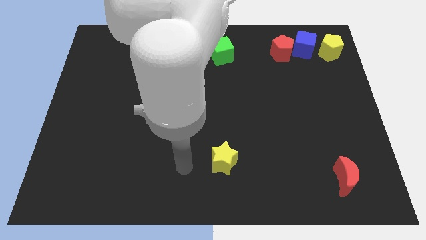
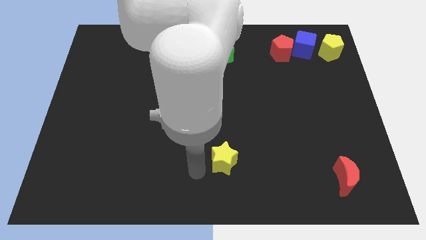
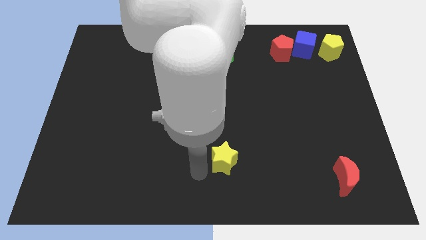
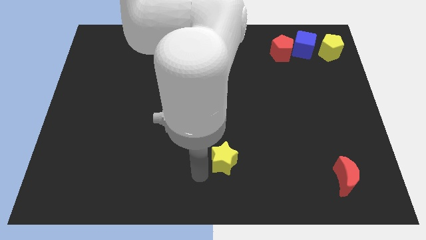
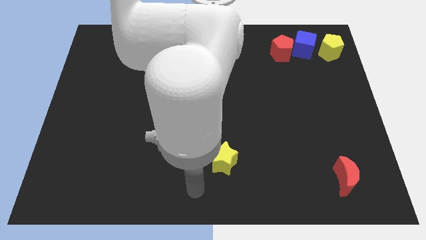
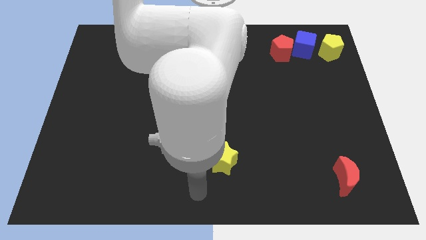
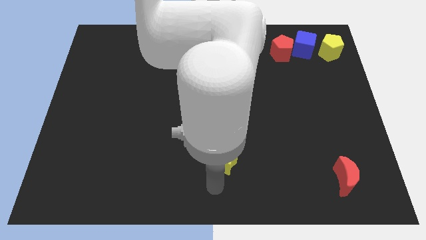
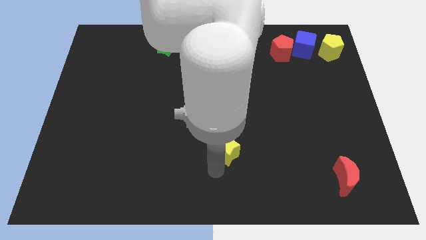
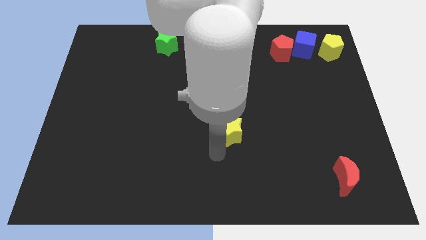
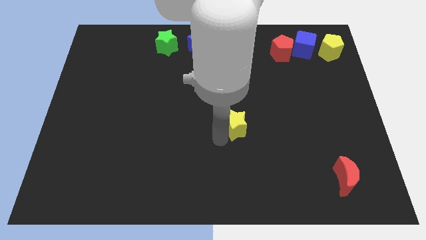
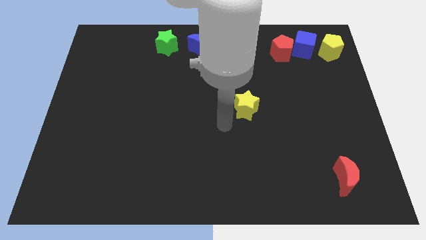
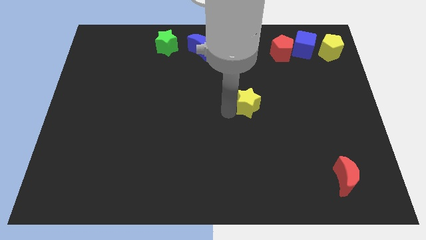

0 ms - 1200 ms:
slide the yellow star diagonally bottom left to red pentagon

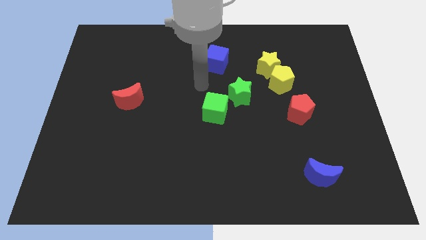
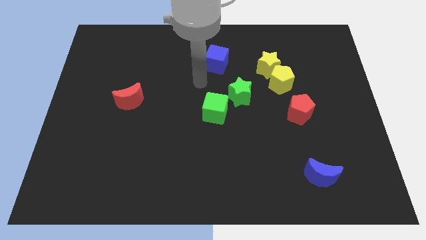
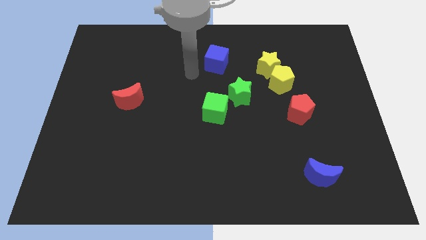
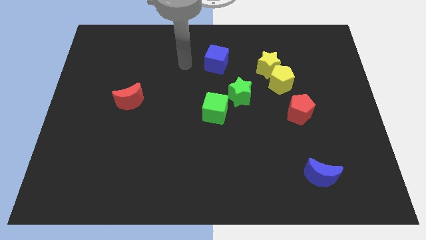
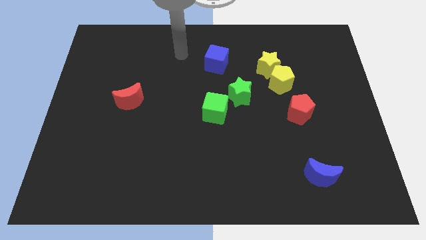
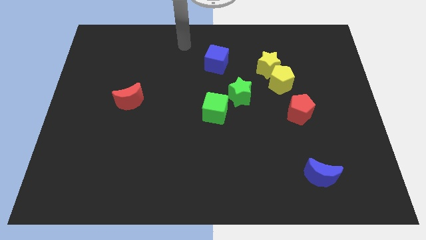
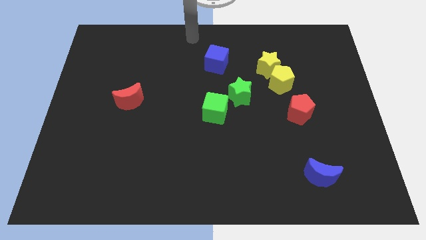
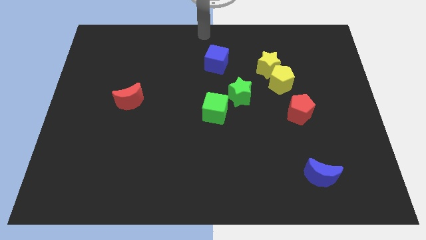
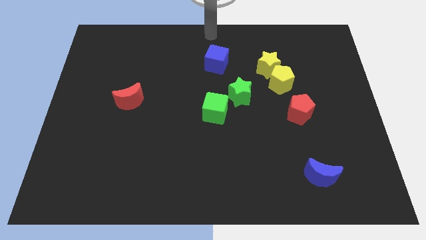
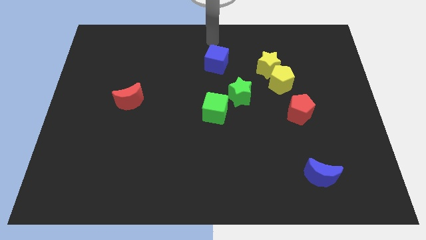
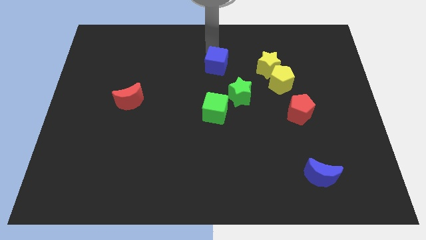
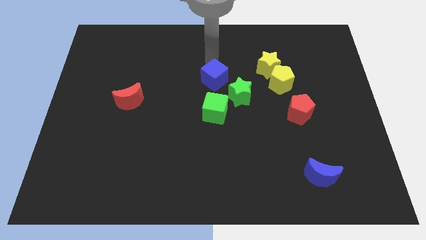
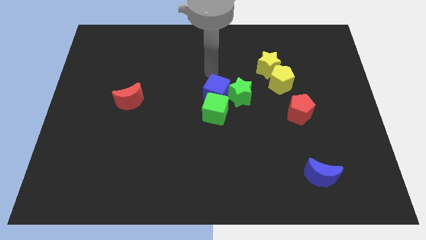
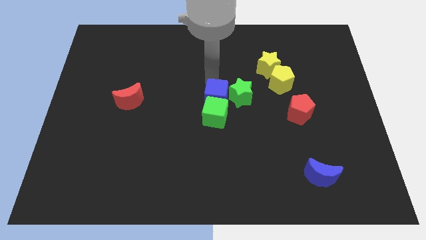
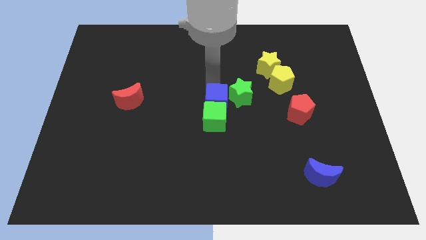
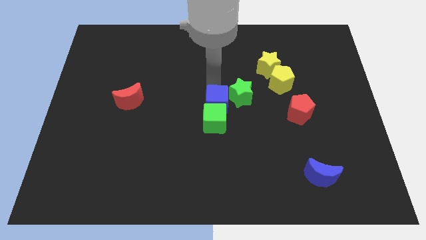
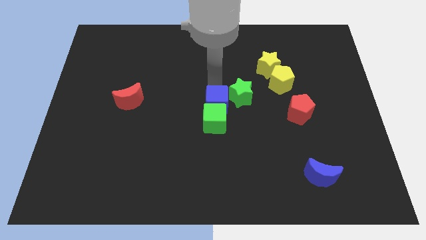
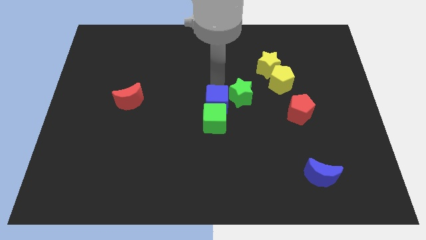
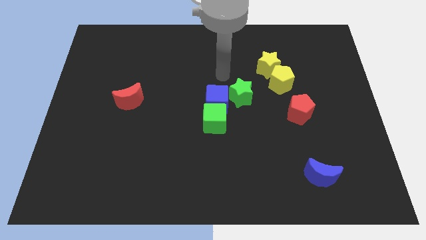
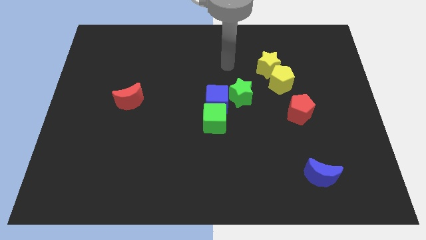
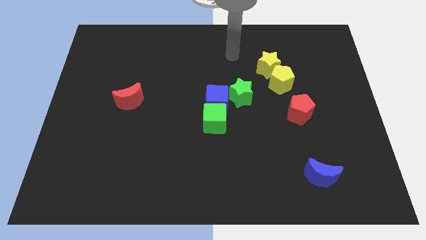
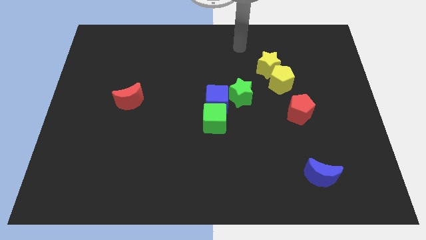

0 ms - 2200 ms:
move the blue cube into the green cube

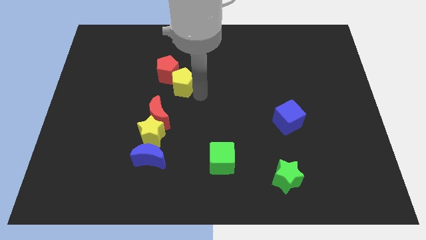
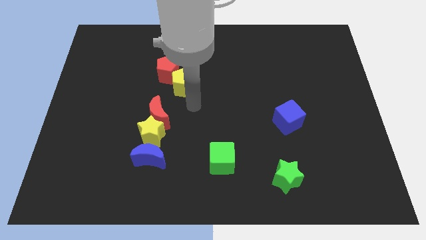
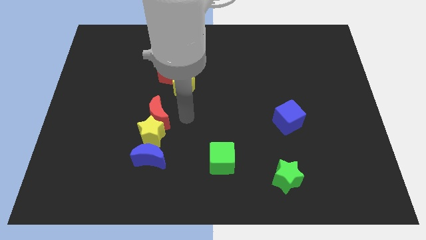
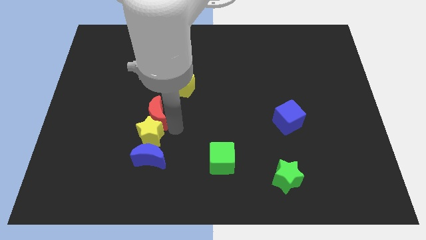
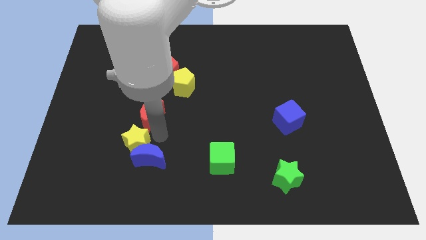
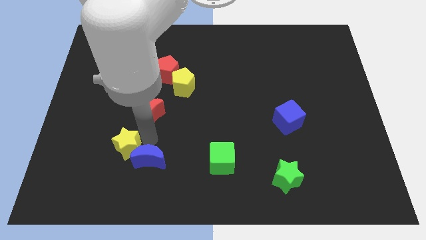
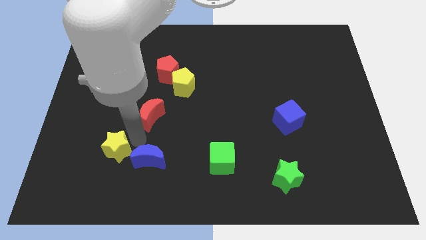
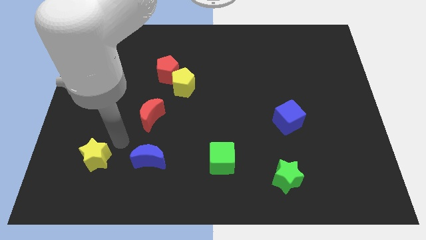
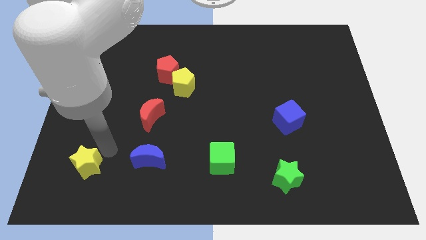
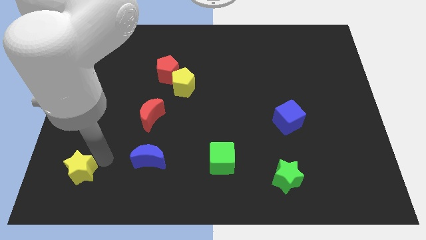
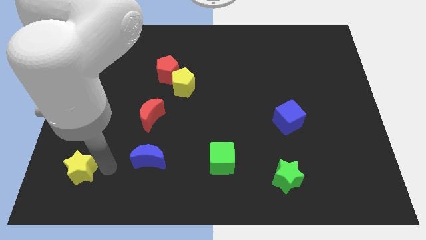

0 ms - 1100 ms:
separate the yellow star from moons

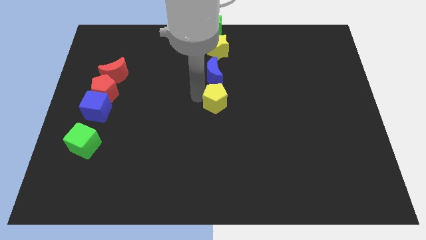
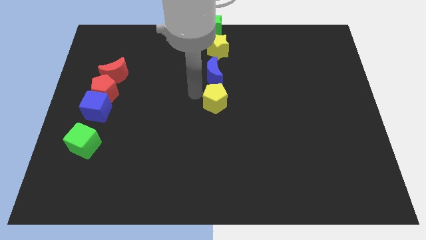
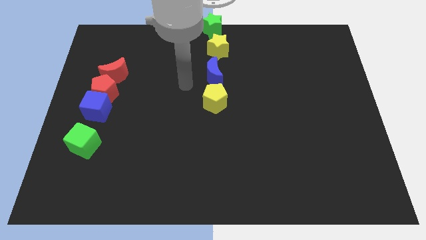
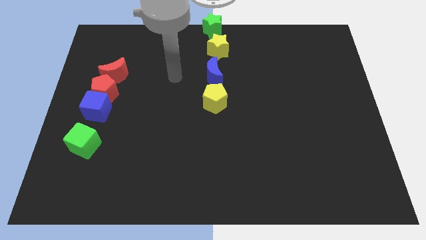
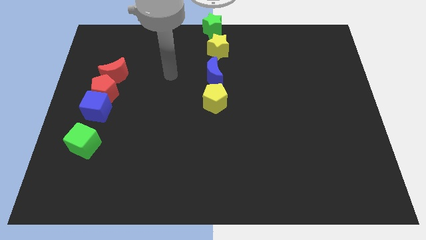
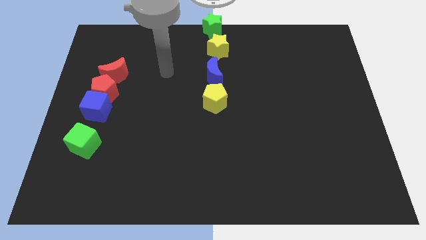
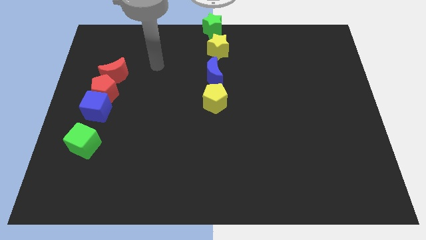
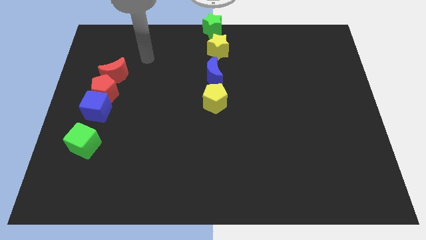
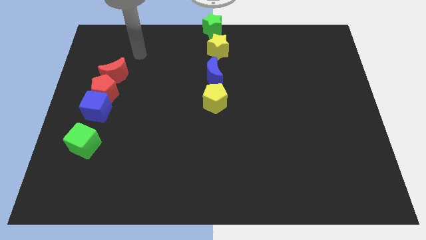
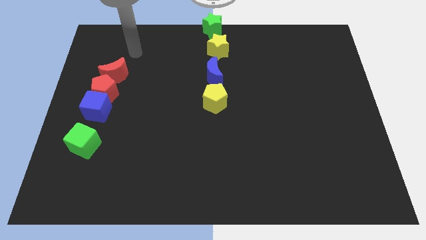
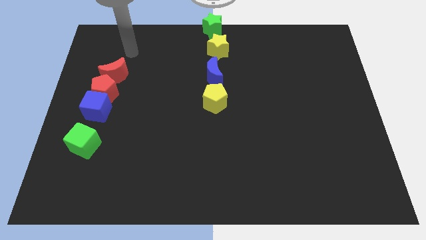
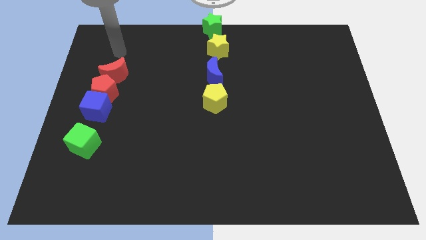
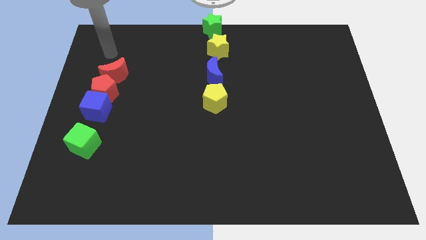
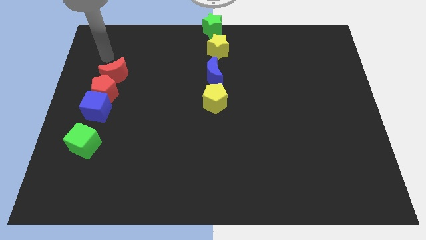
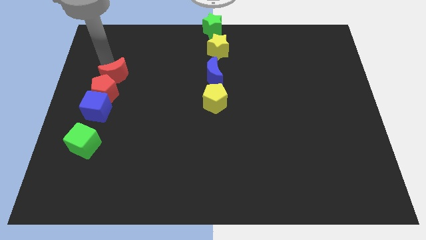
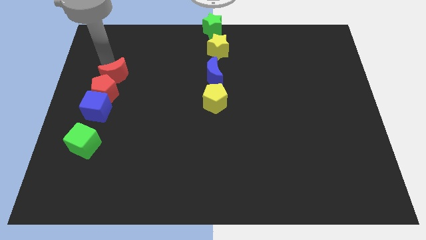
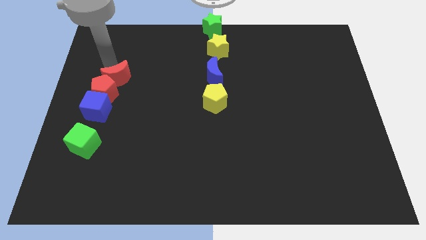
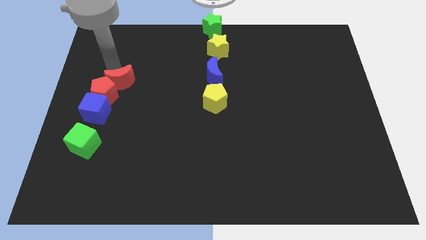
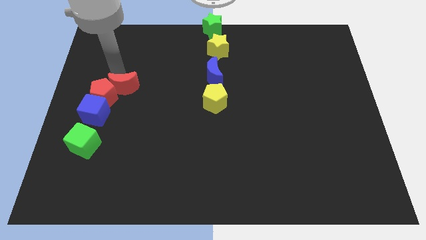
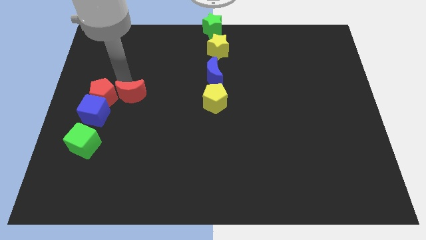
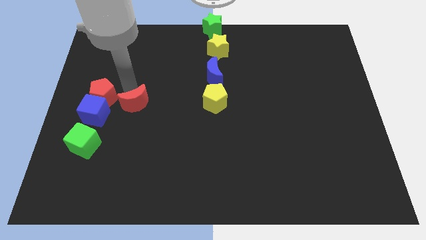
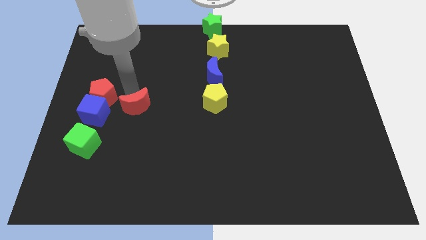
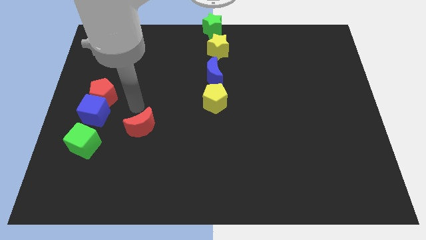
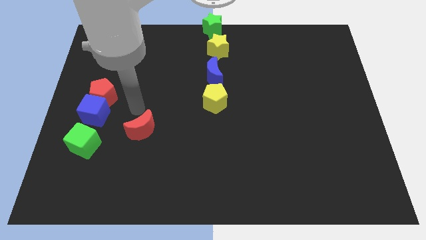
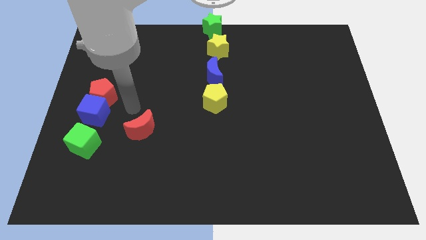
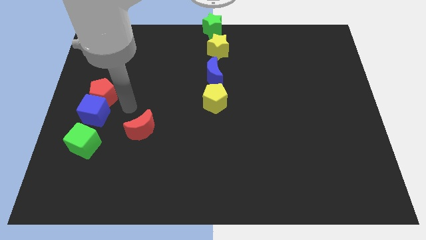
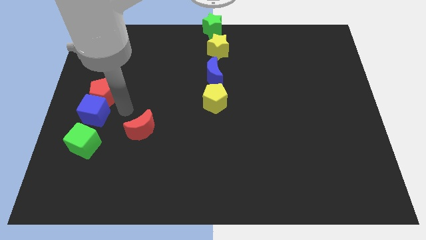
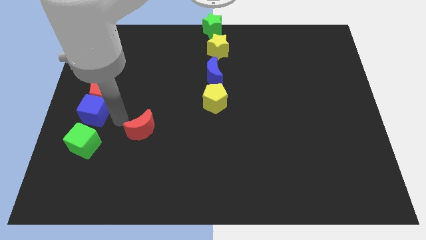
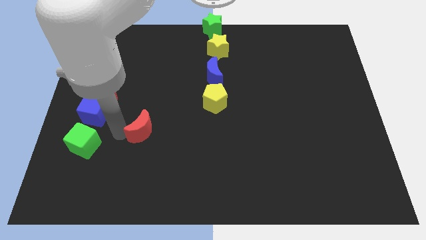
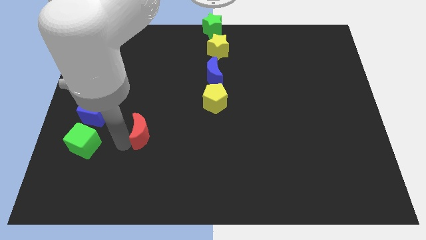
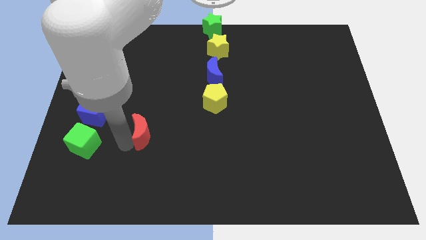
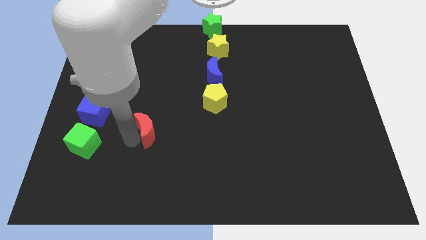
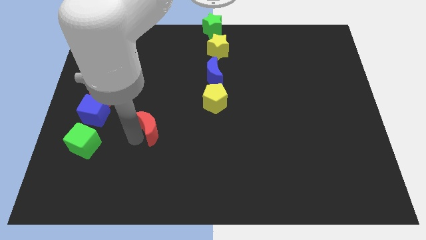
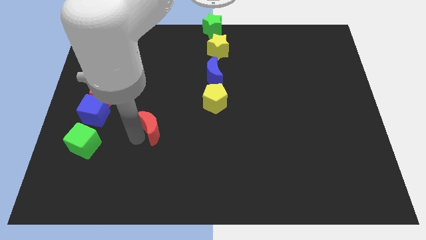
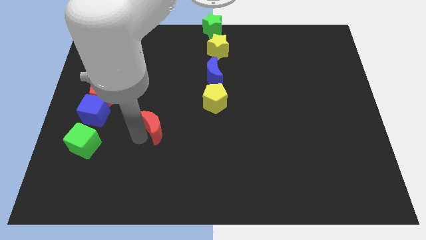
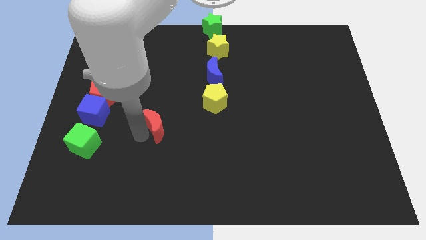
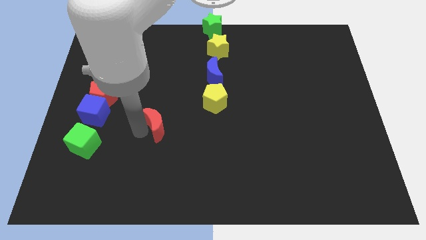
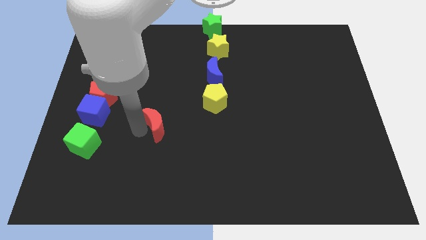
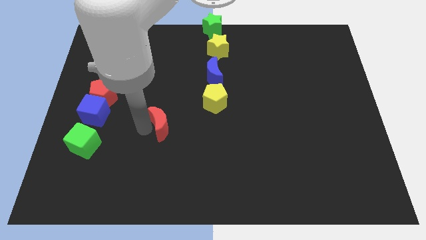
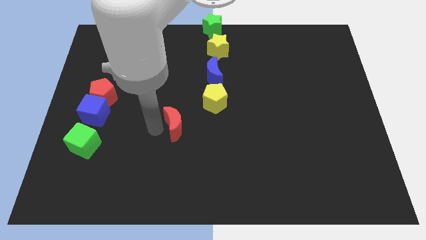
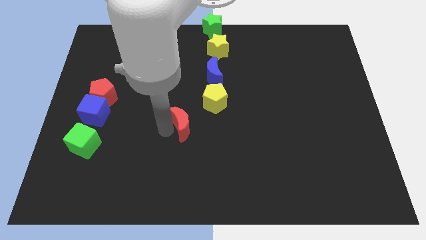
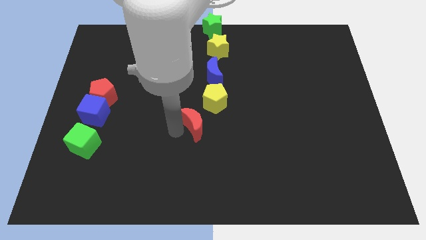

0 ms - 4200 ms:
place the red moon parallel to blue cube
